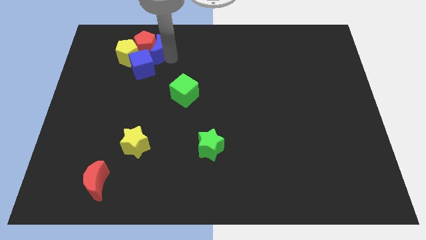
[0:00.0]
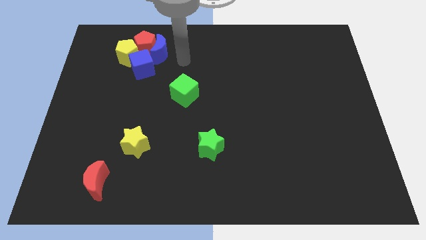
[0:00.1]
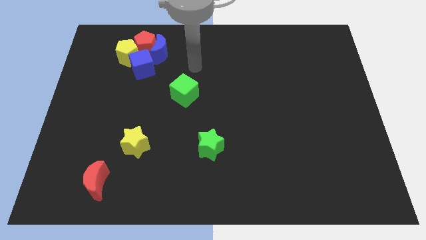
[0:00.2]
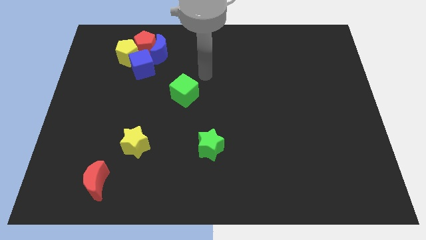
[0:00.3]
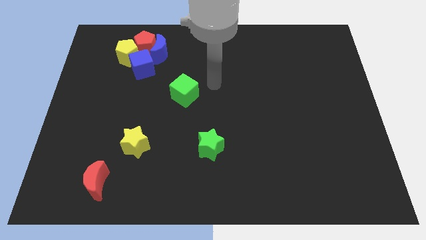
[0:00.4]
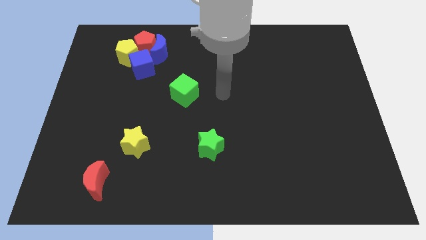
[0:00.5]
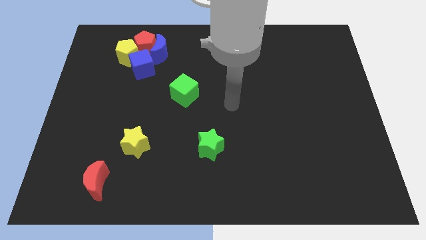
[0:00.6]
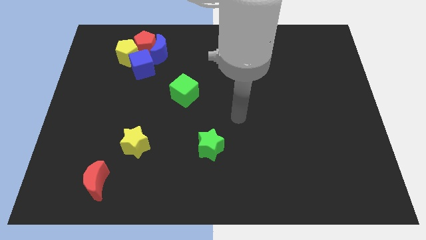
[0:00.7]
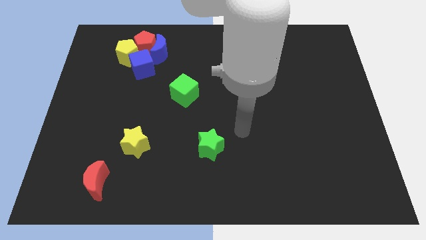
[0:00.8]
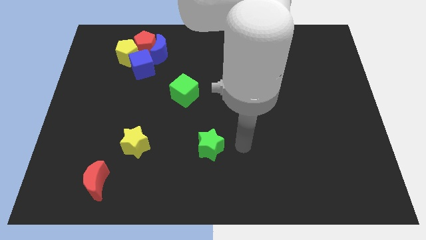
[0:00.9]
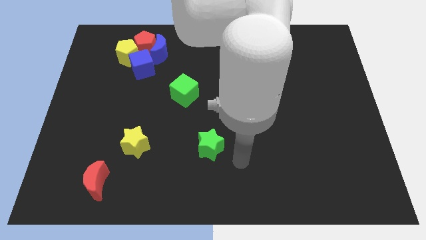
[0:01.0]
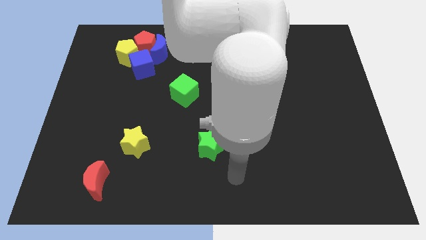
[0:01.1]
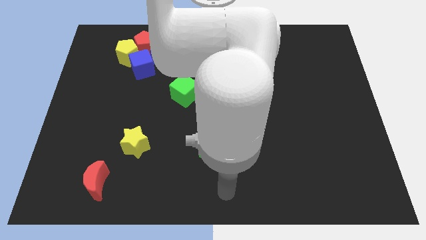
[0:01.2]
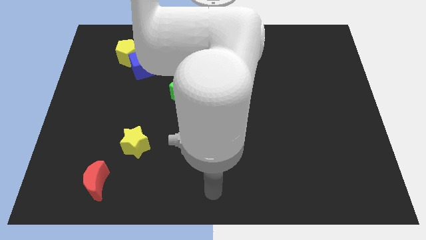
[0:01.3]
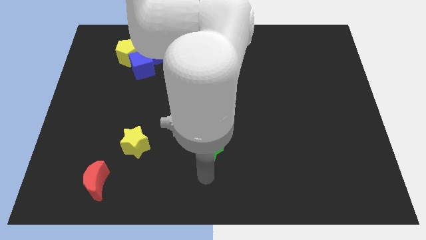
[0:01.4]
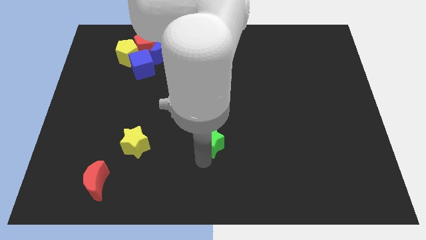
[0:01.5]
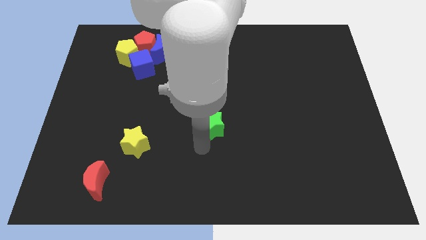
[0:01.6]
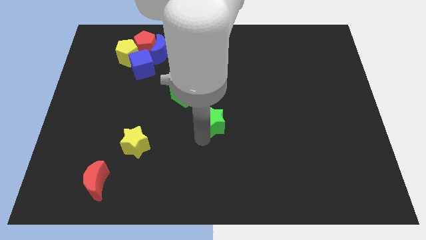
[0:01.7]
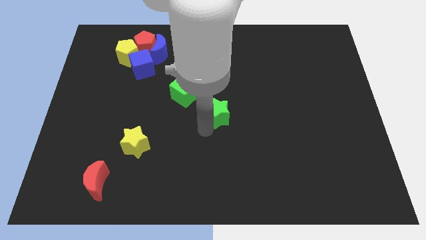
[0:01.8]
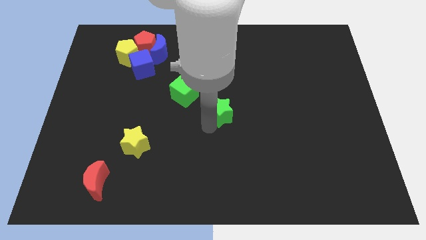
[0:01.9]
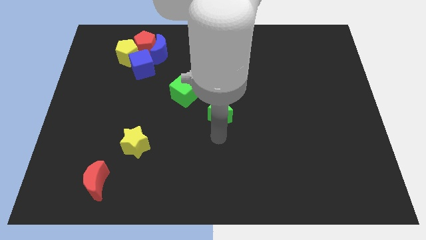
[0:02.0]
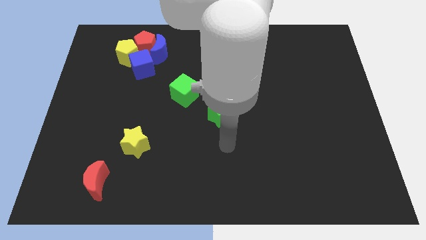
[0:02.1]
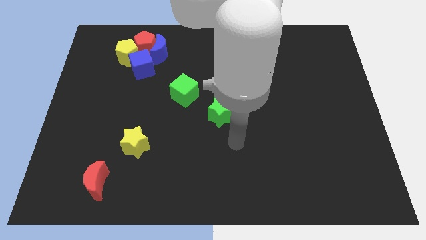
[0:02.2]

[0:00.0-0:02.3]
move your arm away from the blue moon

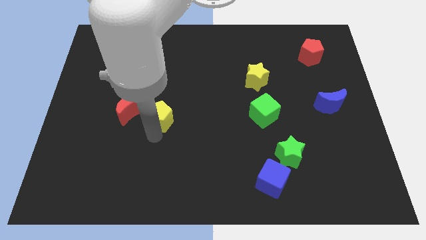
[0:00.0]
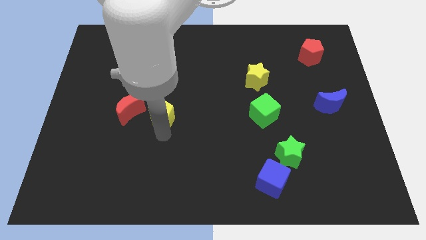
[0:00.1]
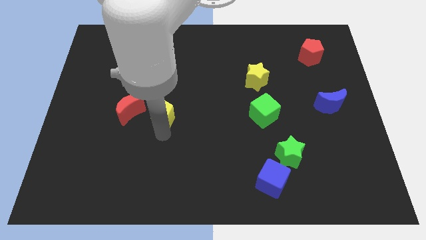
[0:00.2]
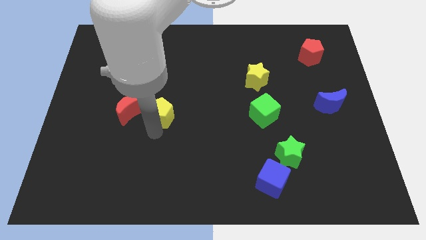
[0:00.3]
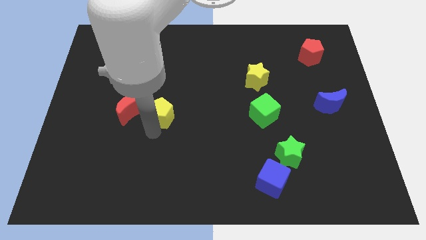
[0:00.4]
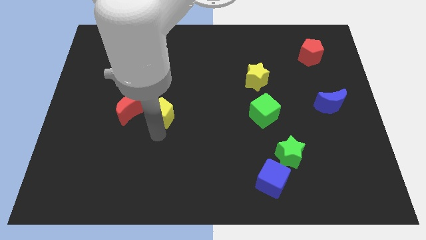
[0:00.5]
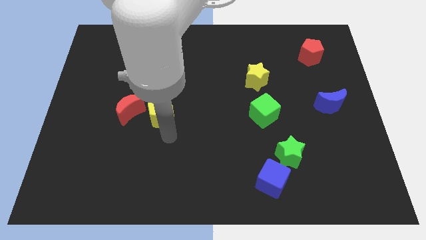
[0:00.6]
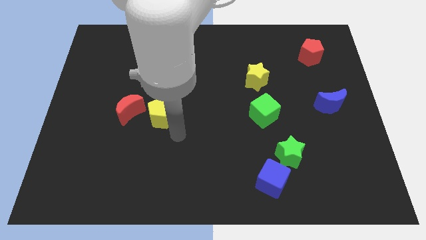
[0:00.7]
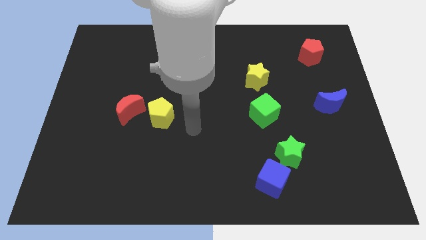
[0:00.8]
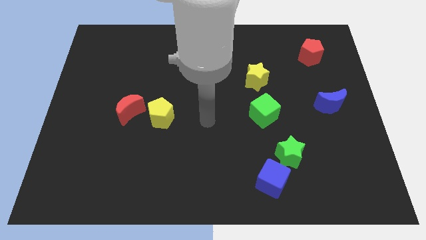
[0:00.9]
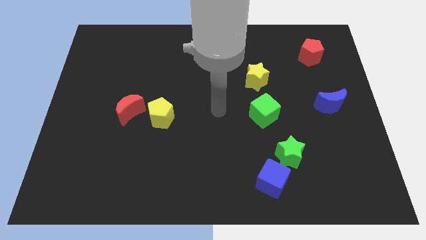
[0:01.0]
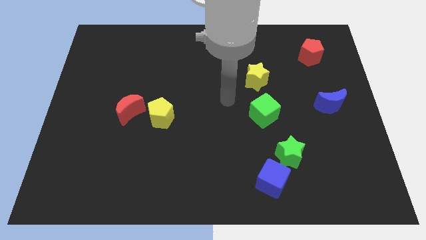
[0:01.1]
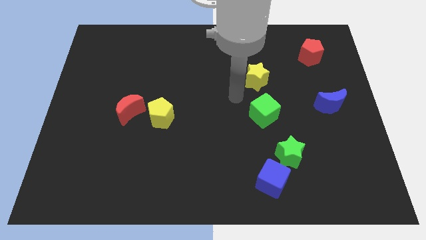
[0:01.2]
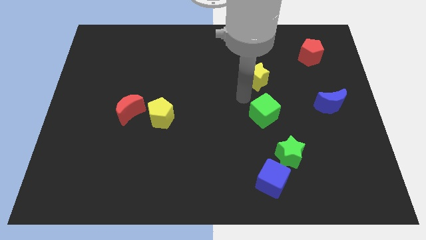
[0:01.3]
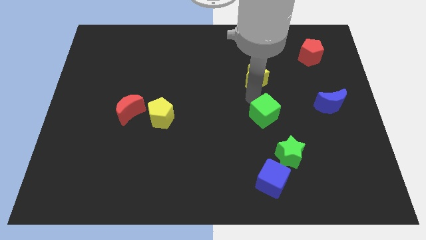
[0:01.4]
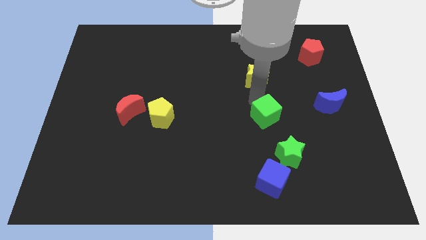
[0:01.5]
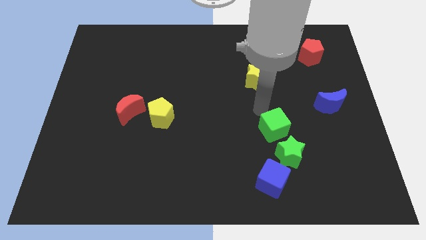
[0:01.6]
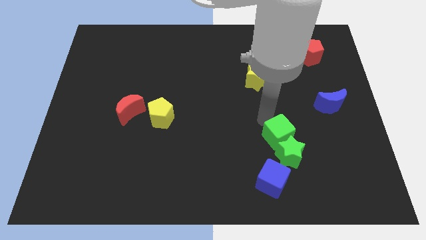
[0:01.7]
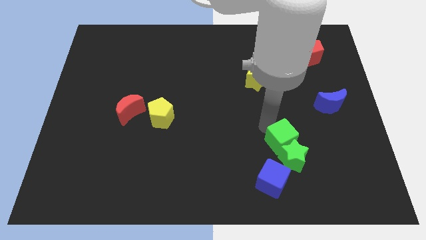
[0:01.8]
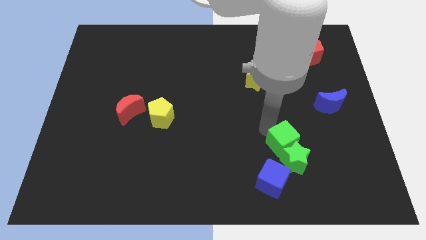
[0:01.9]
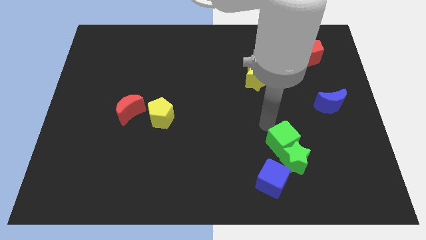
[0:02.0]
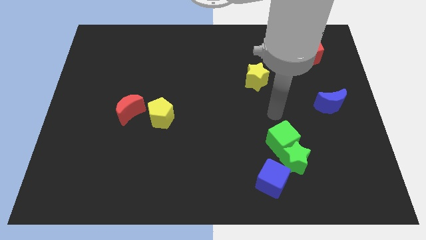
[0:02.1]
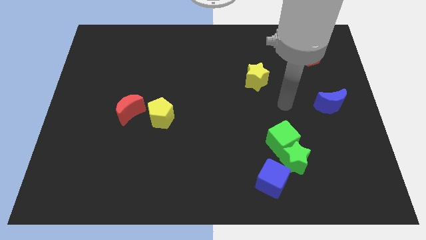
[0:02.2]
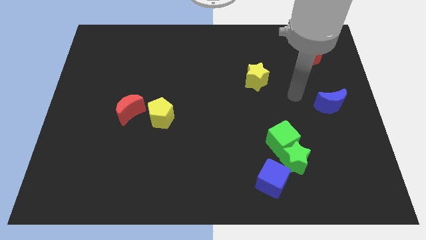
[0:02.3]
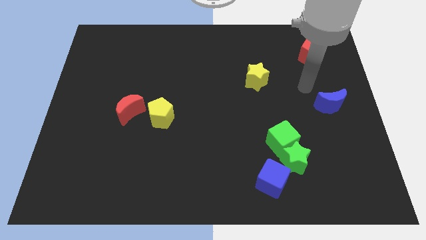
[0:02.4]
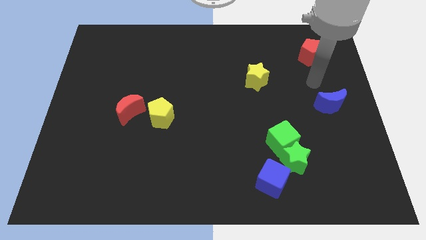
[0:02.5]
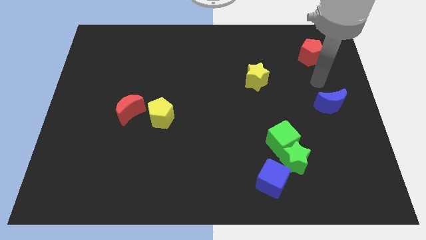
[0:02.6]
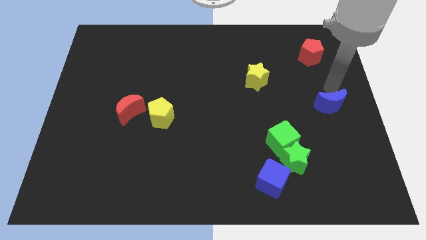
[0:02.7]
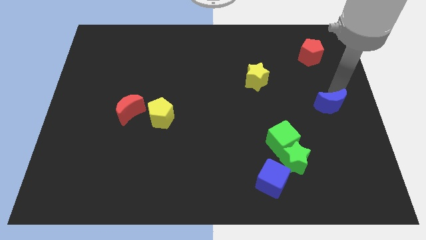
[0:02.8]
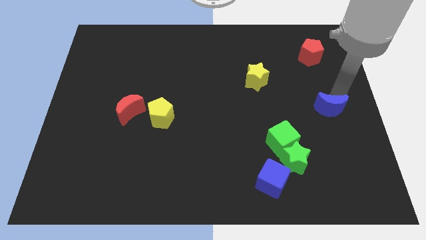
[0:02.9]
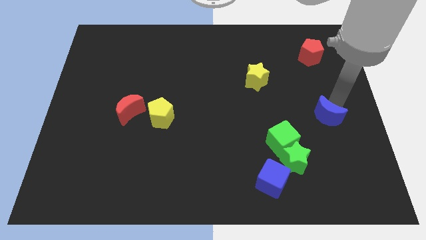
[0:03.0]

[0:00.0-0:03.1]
push the green cube into the green star

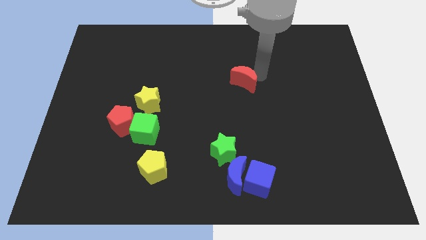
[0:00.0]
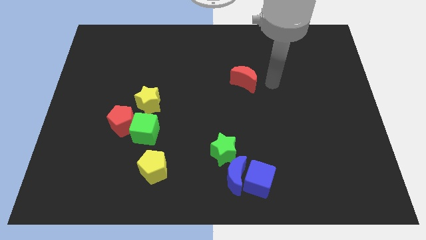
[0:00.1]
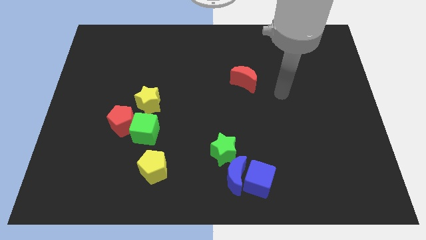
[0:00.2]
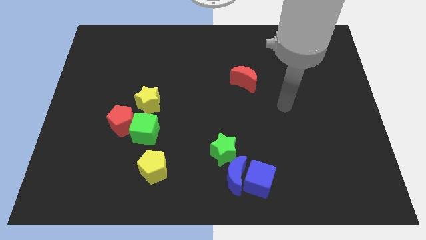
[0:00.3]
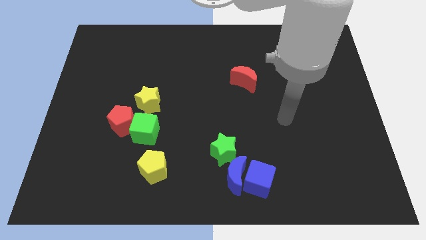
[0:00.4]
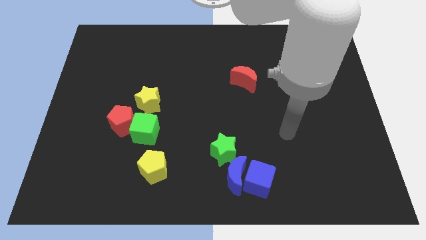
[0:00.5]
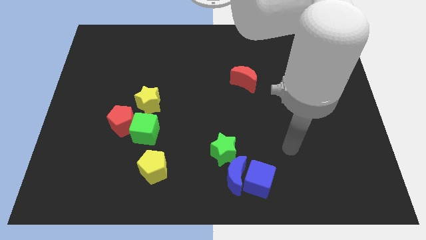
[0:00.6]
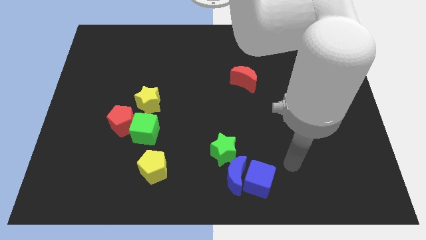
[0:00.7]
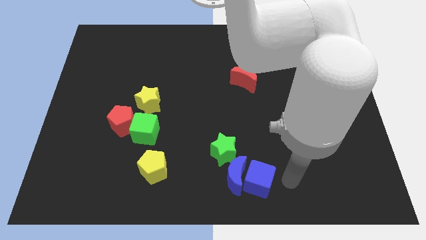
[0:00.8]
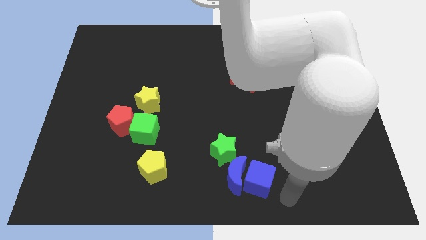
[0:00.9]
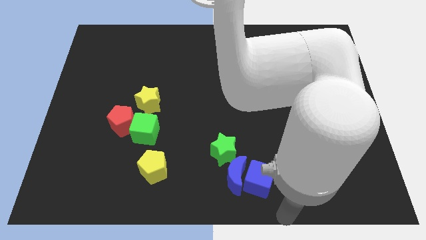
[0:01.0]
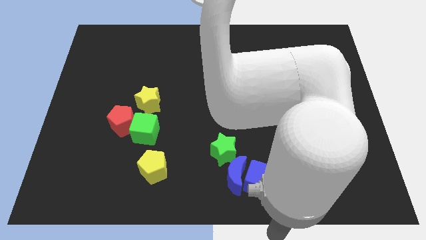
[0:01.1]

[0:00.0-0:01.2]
move your arm to the bottom center of the board

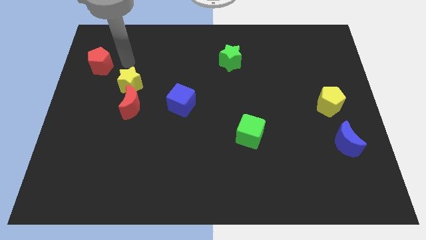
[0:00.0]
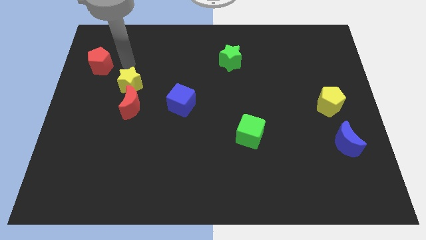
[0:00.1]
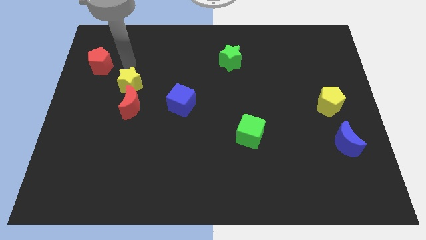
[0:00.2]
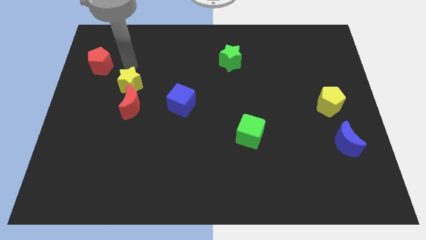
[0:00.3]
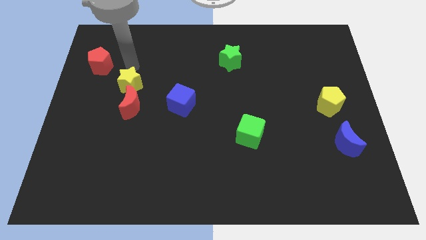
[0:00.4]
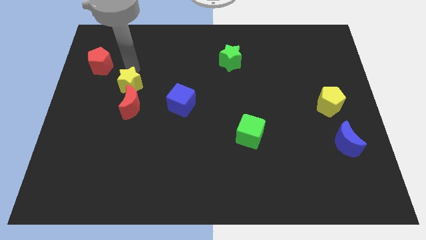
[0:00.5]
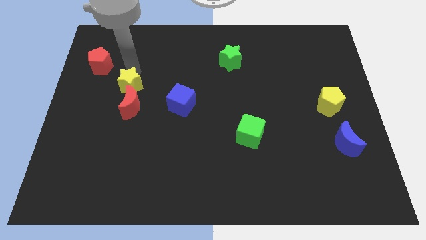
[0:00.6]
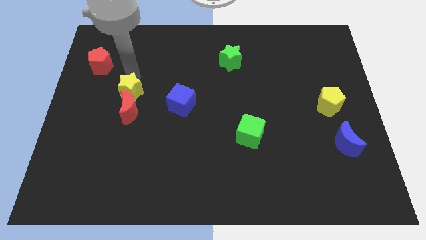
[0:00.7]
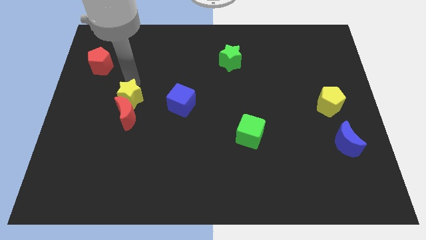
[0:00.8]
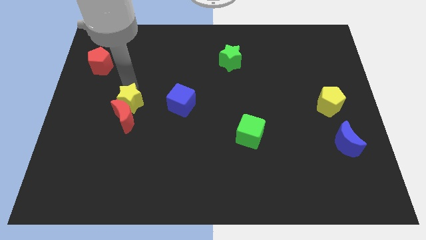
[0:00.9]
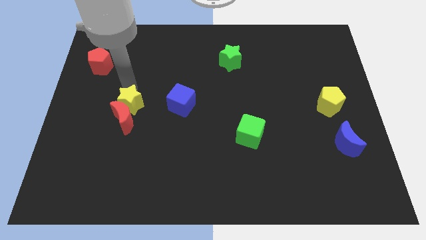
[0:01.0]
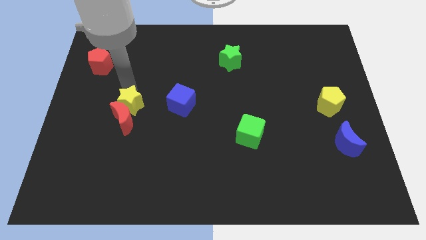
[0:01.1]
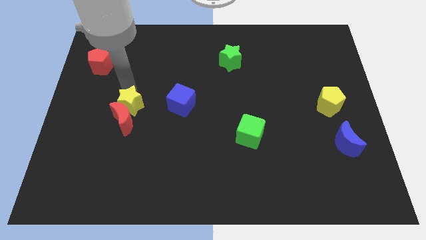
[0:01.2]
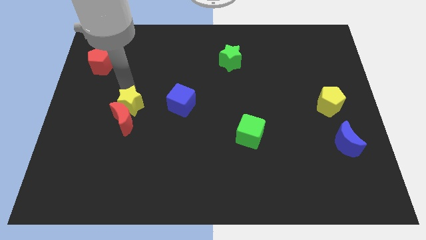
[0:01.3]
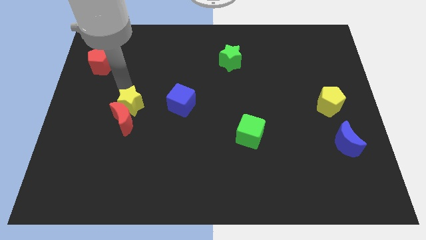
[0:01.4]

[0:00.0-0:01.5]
push the group of blocks towards the bottom side

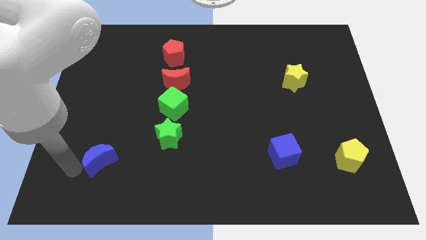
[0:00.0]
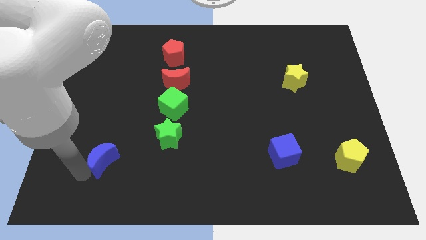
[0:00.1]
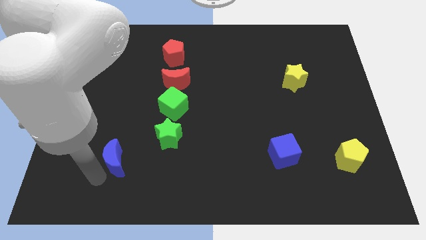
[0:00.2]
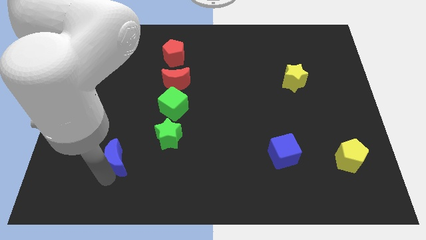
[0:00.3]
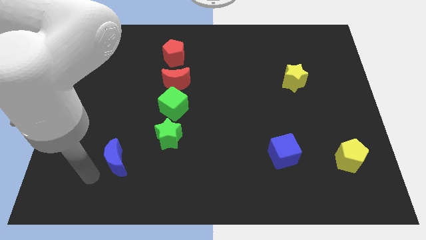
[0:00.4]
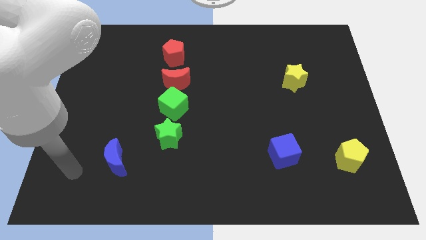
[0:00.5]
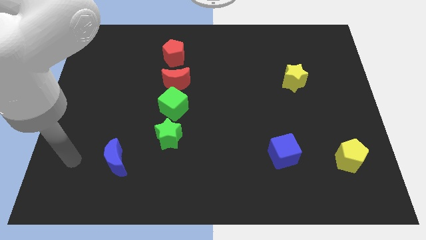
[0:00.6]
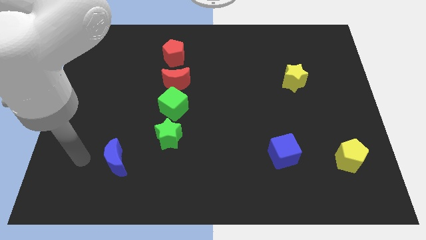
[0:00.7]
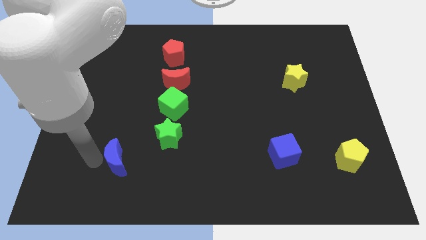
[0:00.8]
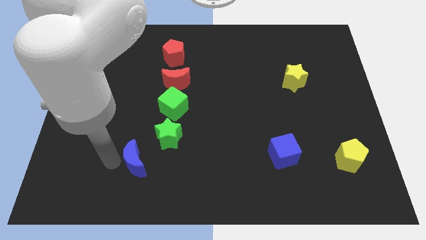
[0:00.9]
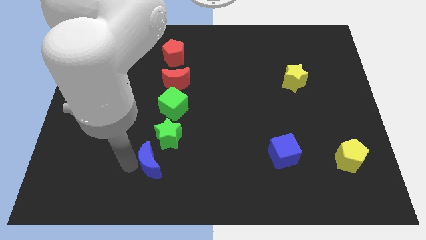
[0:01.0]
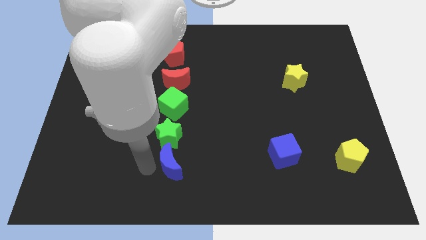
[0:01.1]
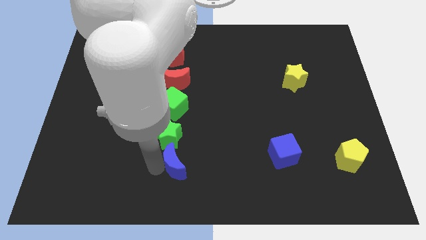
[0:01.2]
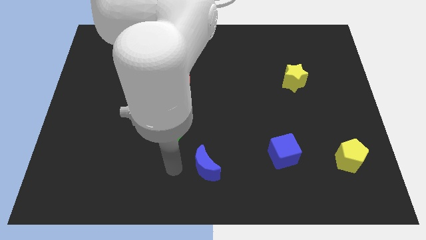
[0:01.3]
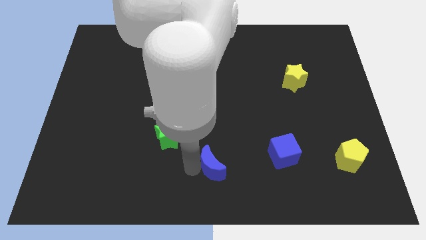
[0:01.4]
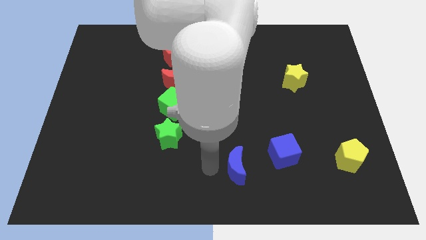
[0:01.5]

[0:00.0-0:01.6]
push blue crescent towards the blue cube
